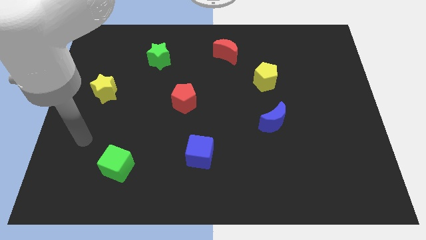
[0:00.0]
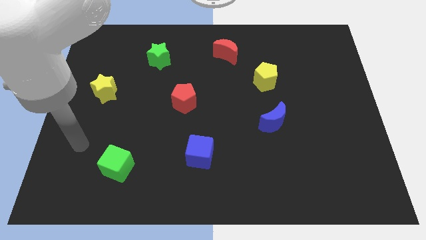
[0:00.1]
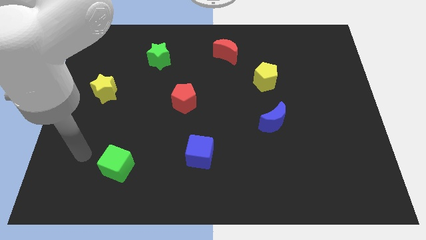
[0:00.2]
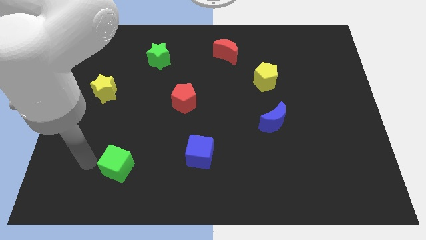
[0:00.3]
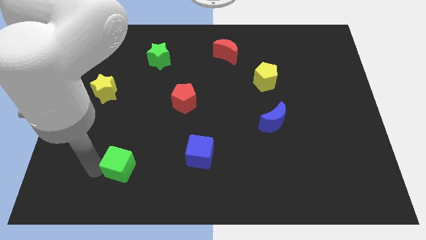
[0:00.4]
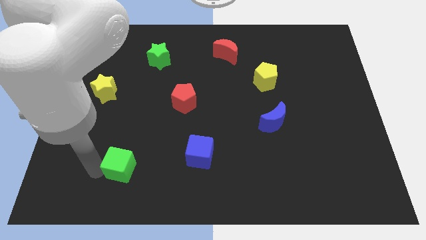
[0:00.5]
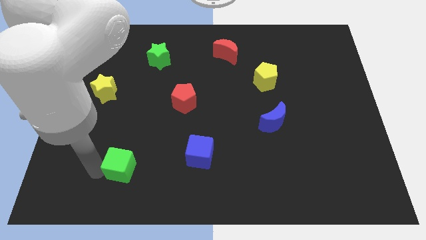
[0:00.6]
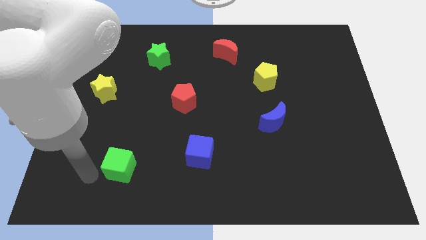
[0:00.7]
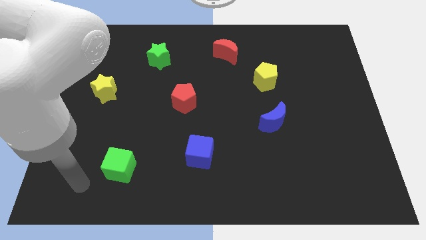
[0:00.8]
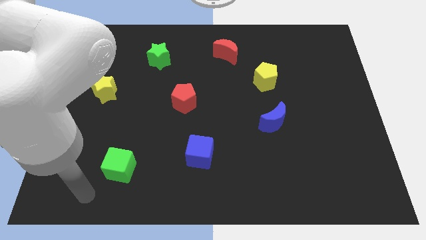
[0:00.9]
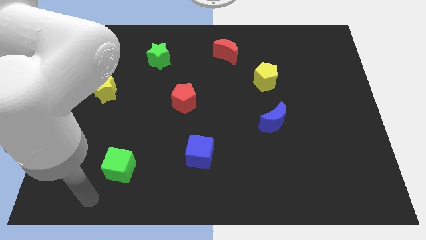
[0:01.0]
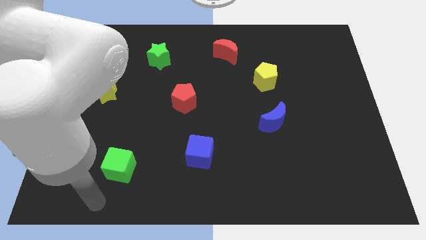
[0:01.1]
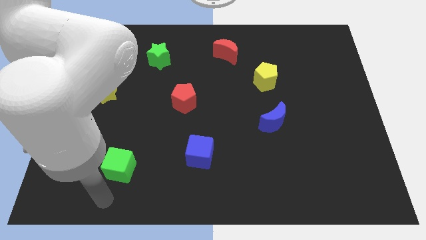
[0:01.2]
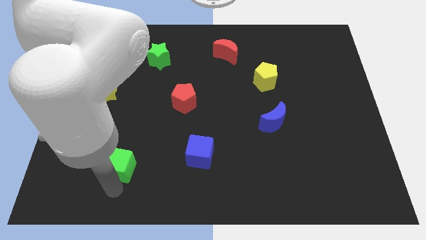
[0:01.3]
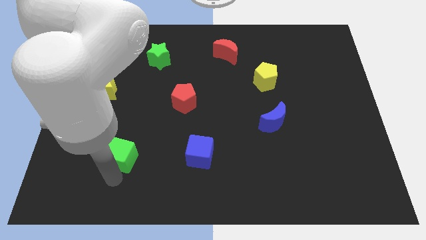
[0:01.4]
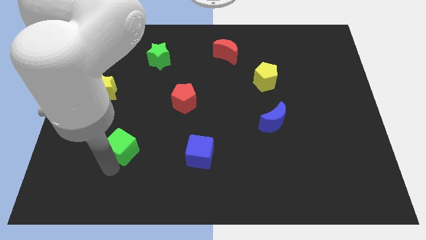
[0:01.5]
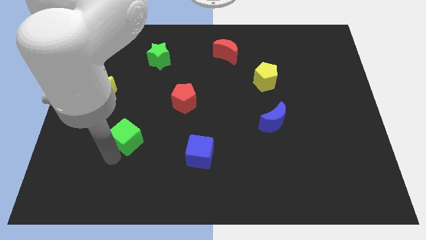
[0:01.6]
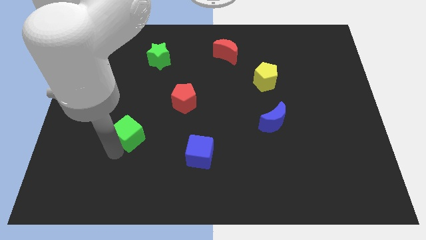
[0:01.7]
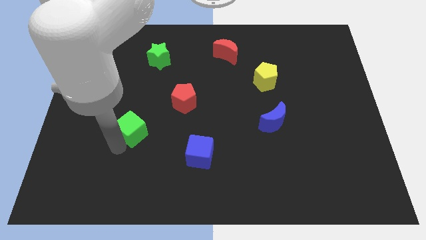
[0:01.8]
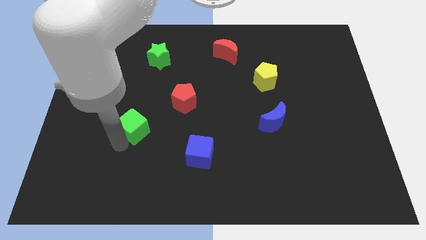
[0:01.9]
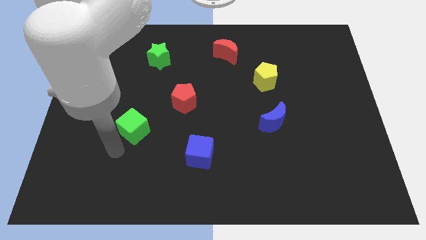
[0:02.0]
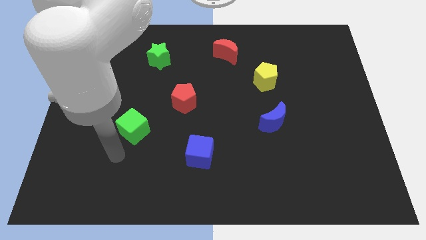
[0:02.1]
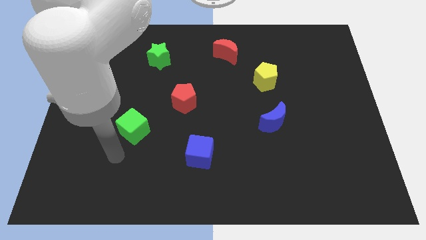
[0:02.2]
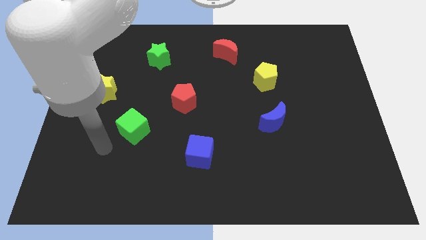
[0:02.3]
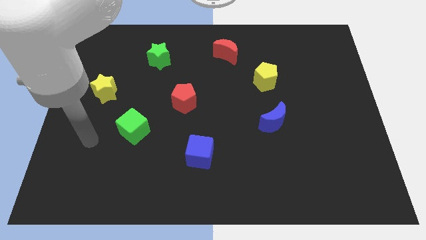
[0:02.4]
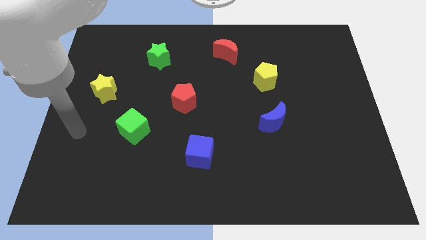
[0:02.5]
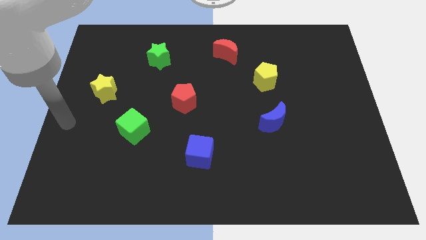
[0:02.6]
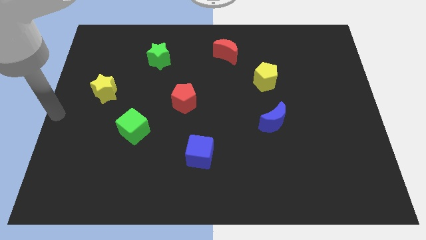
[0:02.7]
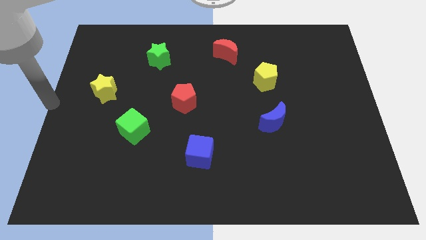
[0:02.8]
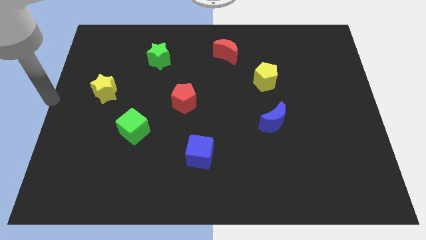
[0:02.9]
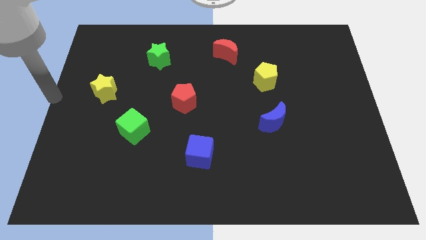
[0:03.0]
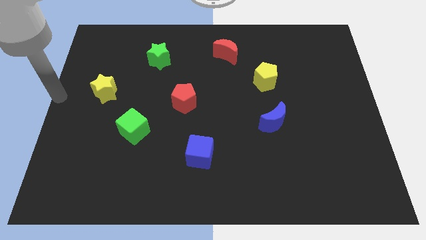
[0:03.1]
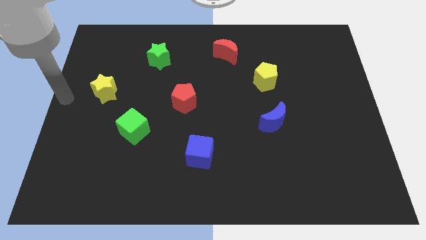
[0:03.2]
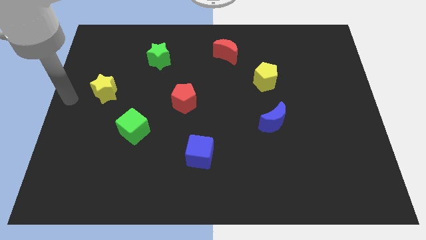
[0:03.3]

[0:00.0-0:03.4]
place green cube adjacent to red pentagon

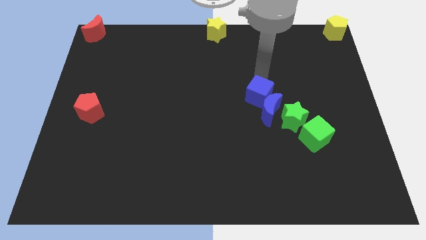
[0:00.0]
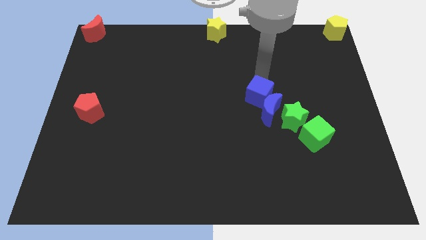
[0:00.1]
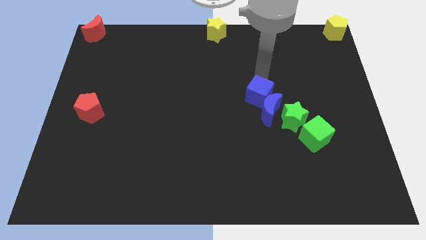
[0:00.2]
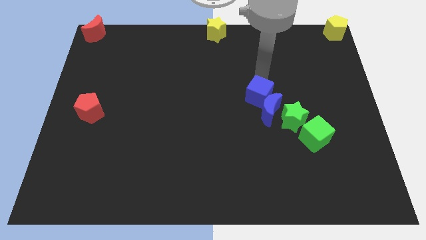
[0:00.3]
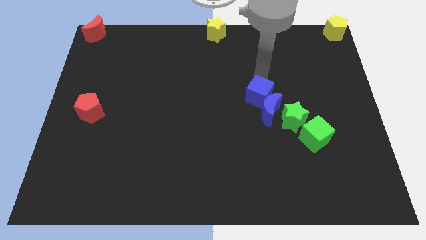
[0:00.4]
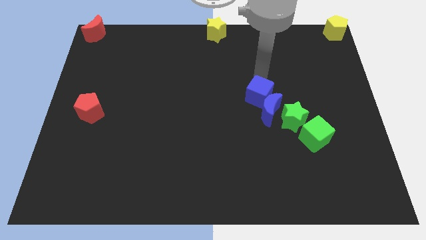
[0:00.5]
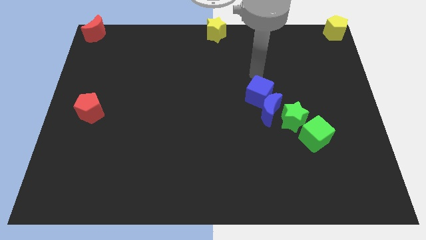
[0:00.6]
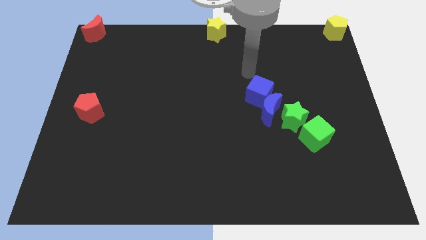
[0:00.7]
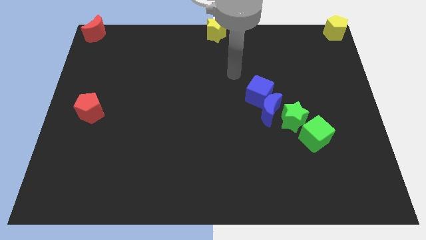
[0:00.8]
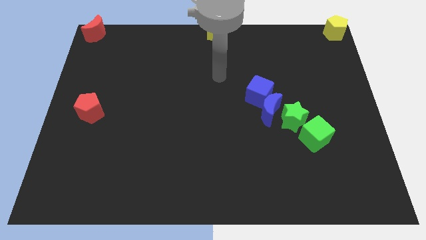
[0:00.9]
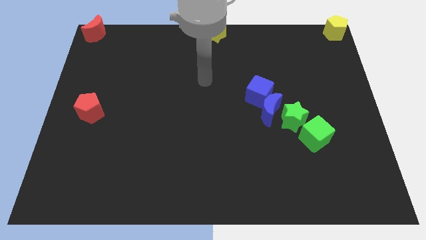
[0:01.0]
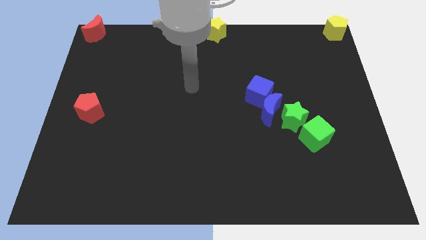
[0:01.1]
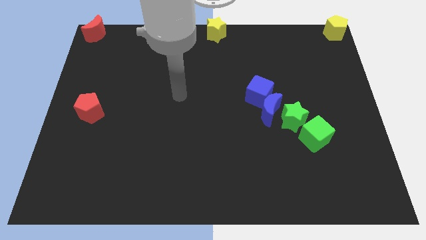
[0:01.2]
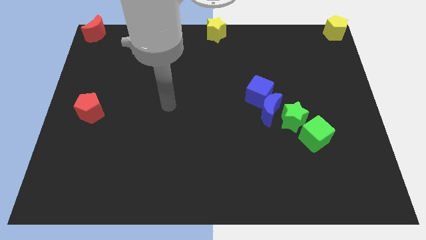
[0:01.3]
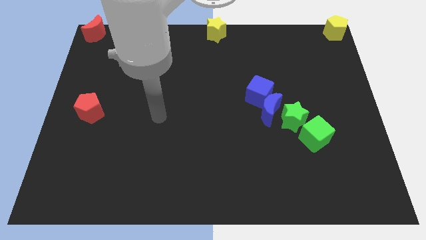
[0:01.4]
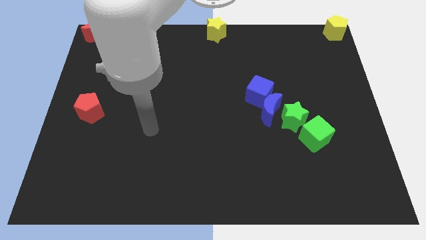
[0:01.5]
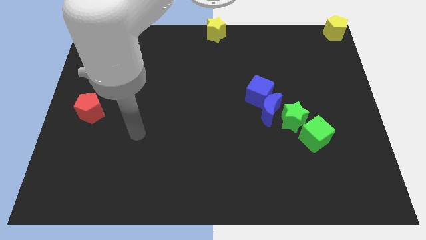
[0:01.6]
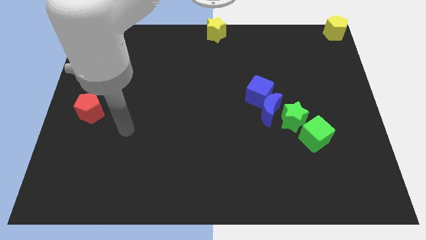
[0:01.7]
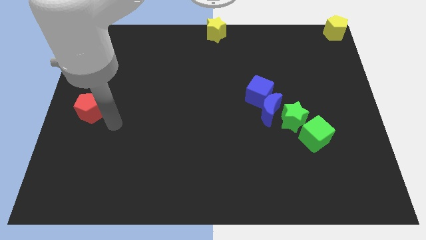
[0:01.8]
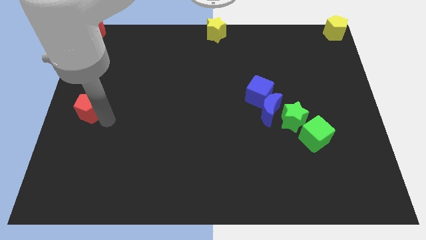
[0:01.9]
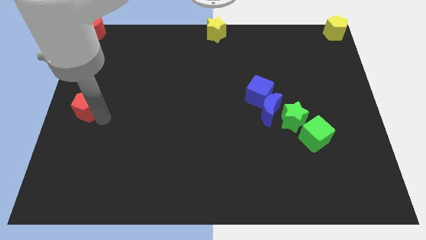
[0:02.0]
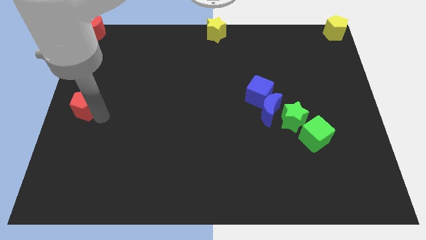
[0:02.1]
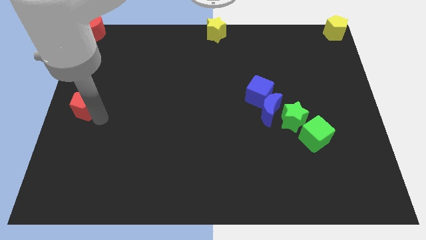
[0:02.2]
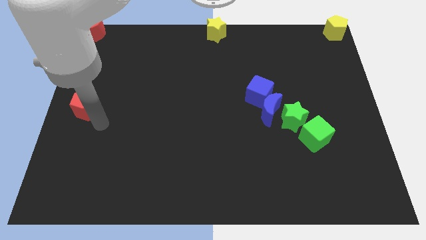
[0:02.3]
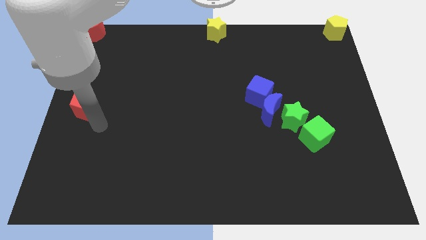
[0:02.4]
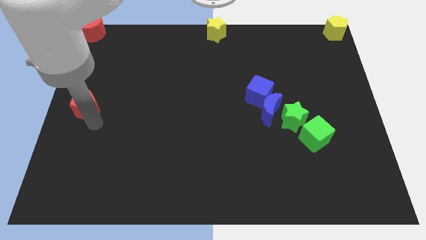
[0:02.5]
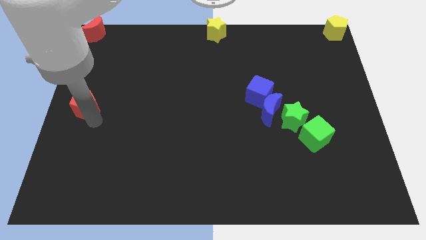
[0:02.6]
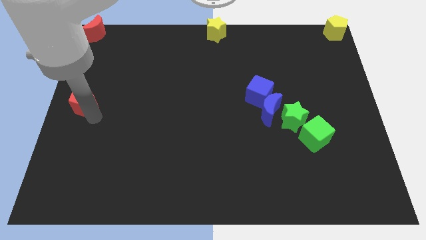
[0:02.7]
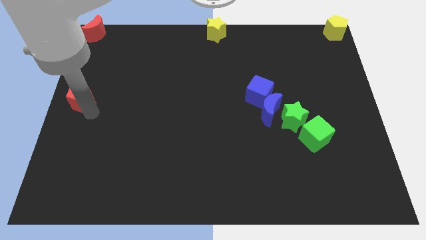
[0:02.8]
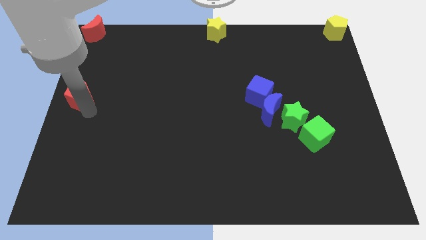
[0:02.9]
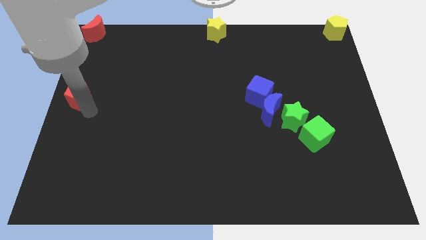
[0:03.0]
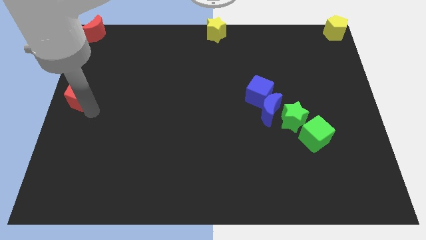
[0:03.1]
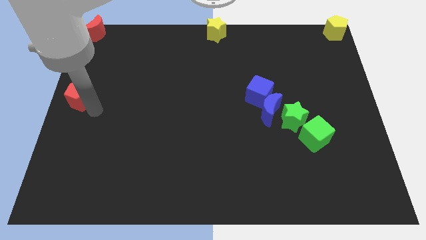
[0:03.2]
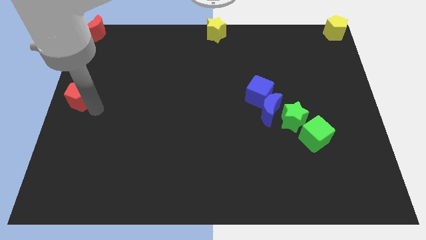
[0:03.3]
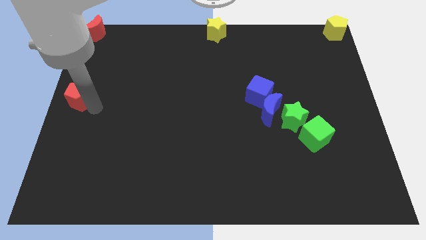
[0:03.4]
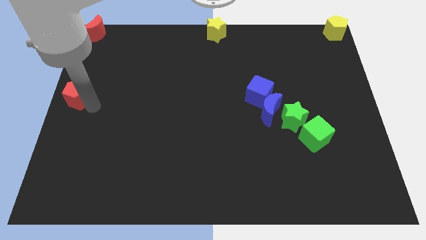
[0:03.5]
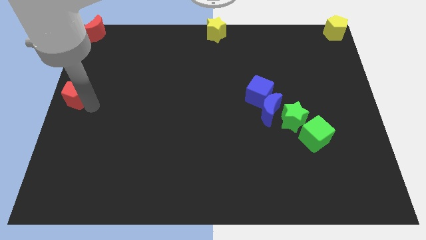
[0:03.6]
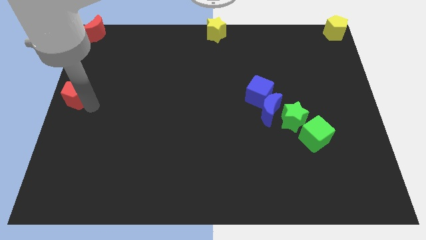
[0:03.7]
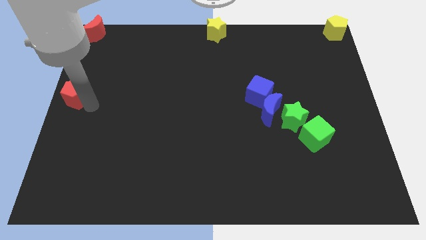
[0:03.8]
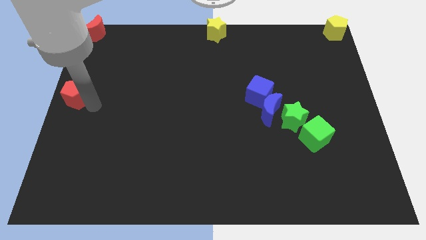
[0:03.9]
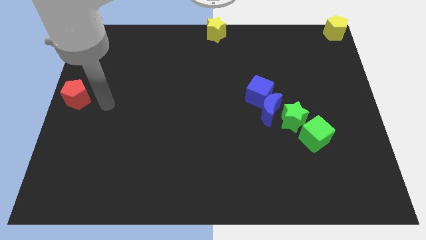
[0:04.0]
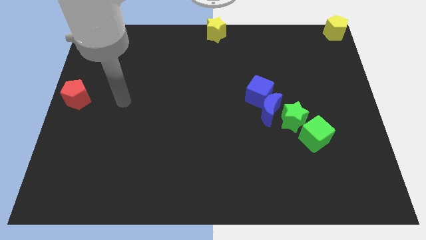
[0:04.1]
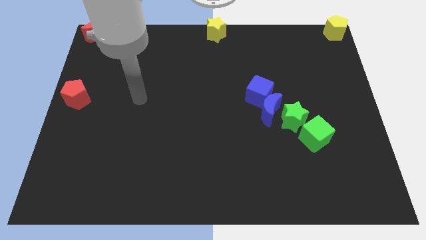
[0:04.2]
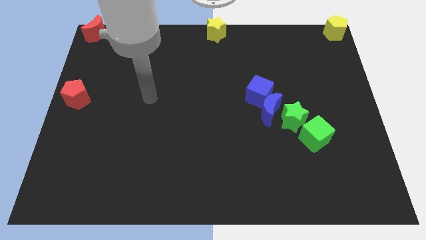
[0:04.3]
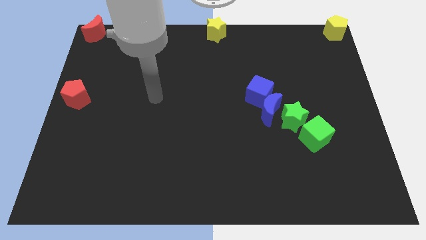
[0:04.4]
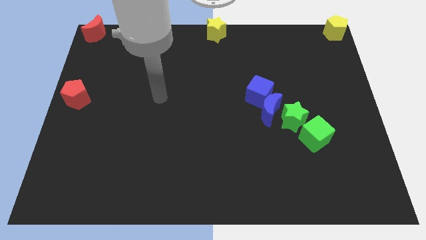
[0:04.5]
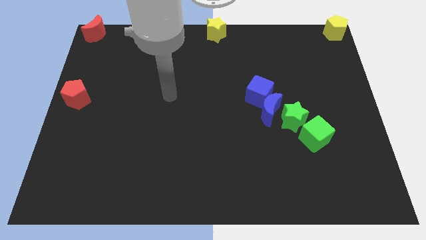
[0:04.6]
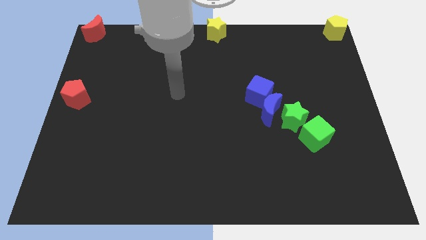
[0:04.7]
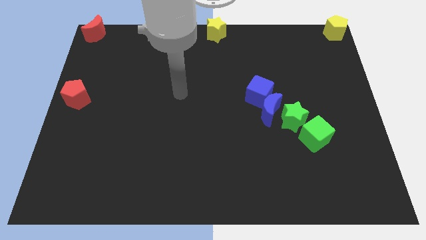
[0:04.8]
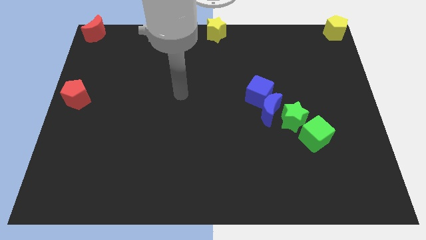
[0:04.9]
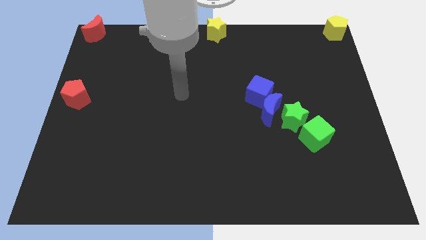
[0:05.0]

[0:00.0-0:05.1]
move the red pentagon to the left center of the board

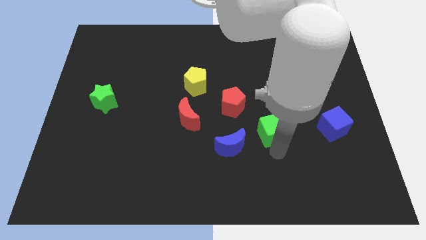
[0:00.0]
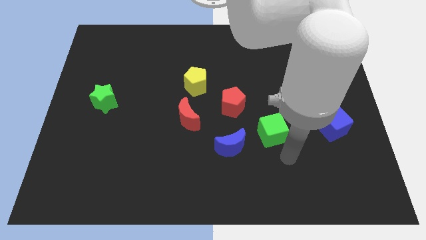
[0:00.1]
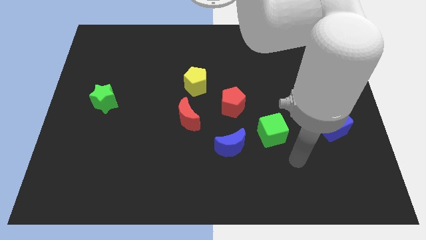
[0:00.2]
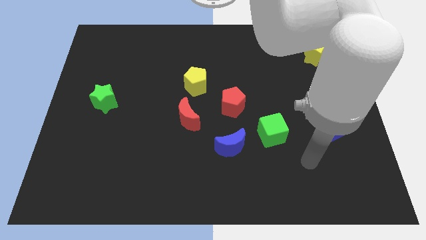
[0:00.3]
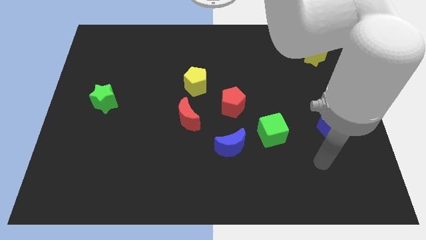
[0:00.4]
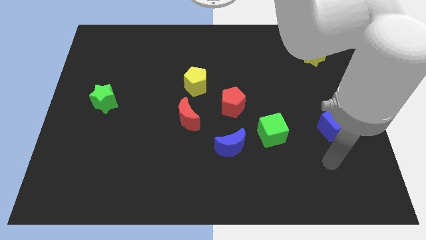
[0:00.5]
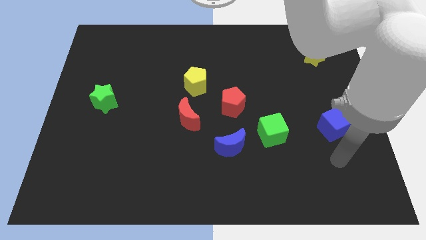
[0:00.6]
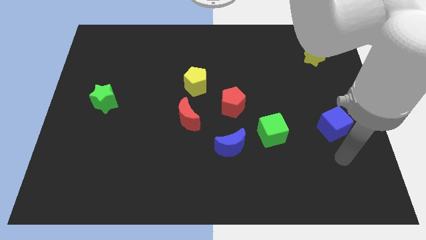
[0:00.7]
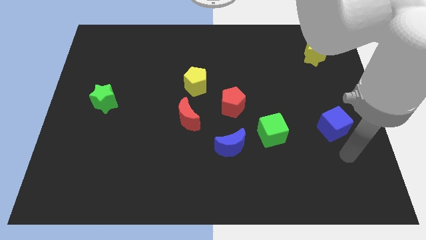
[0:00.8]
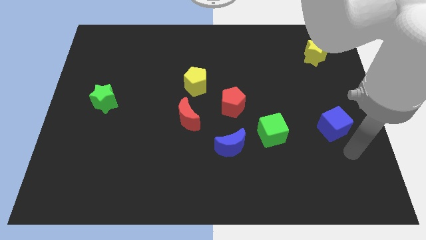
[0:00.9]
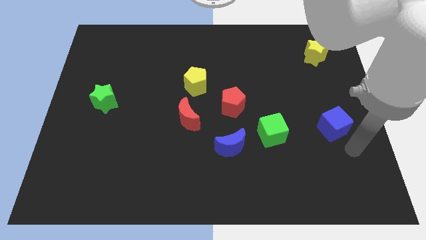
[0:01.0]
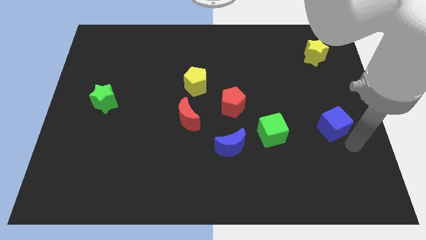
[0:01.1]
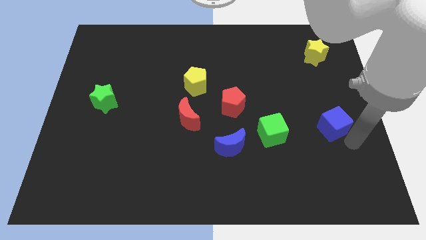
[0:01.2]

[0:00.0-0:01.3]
place your arm to the bottom of the blue cube
